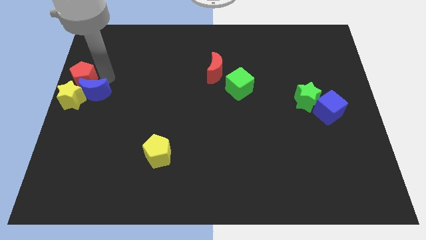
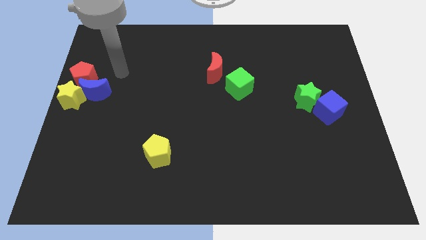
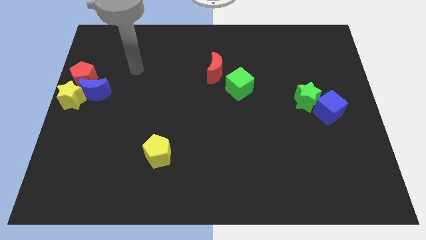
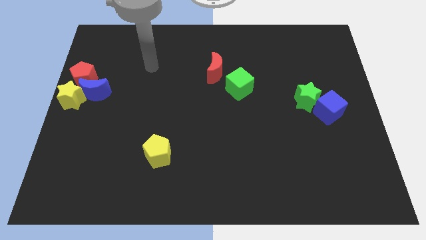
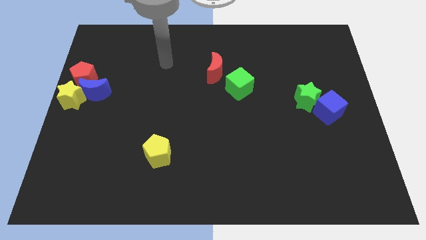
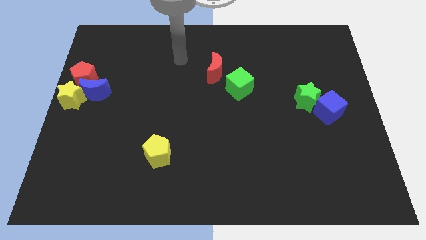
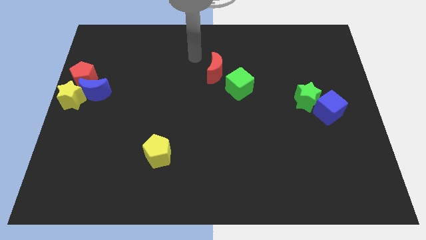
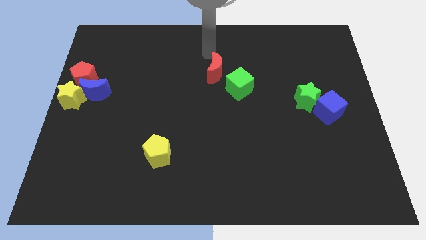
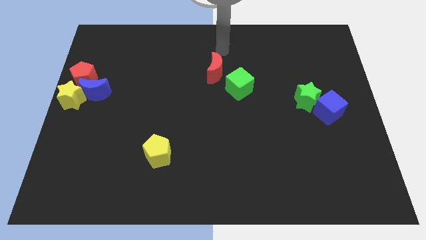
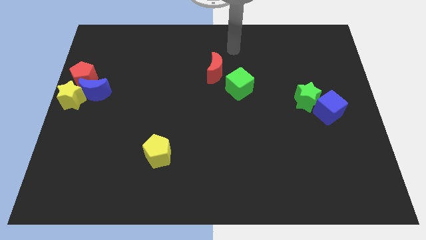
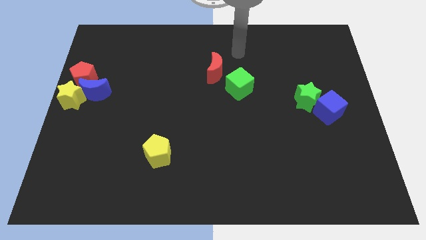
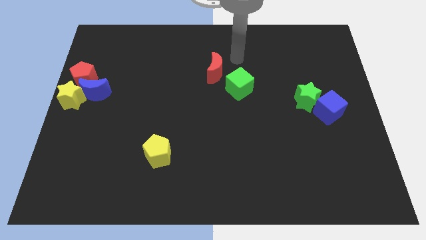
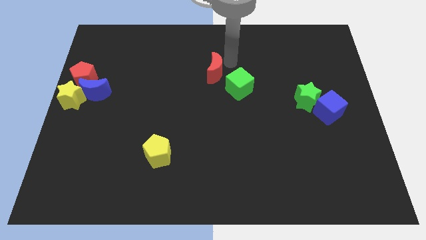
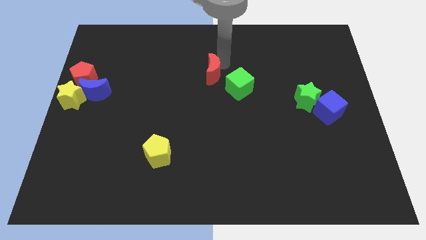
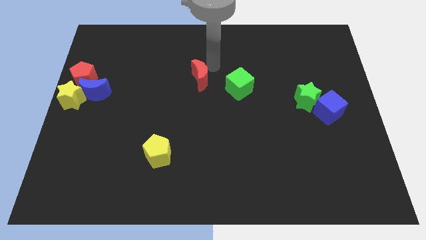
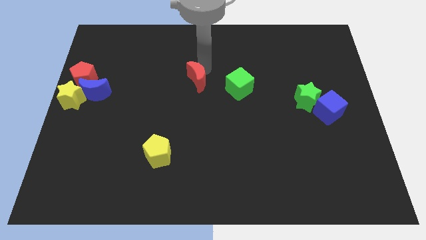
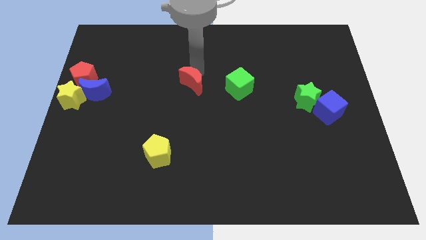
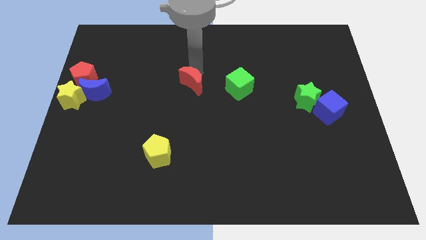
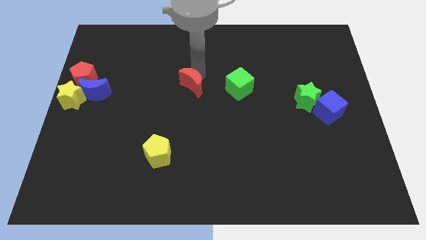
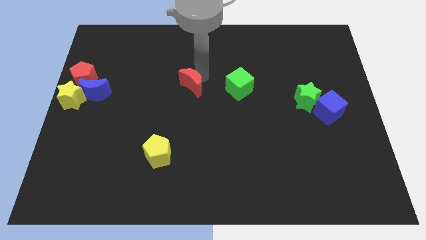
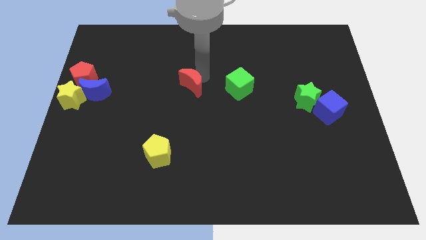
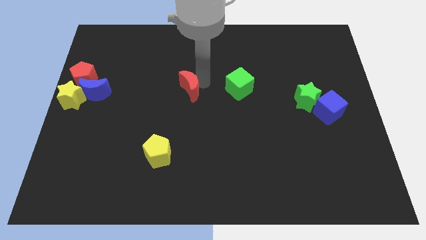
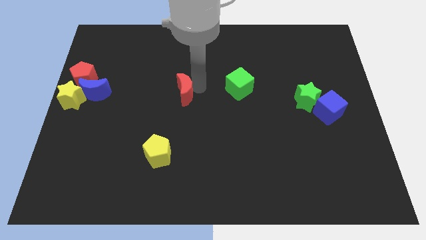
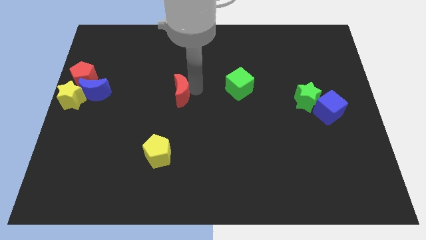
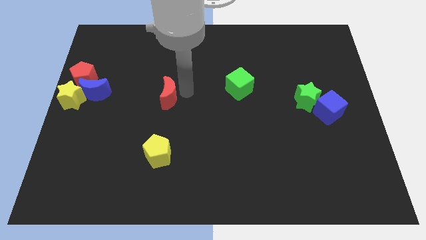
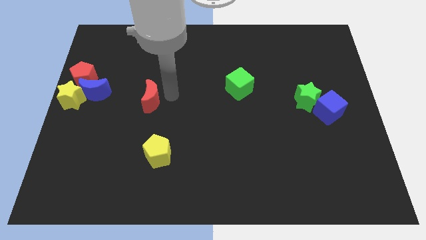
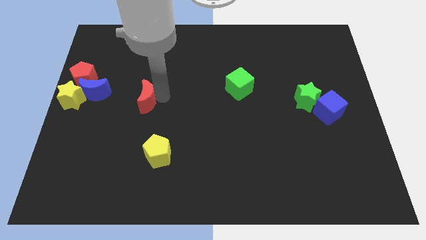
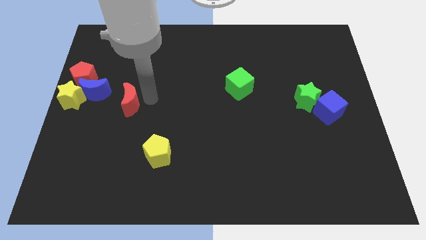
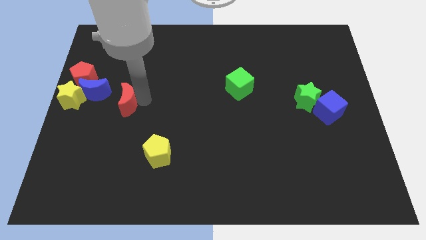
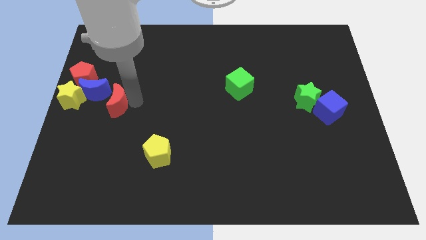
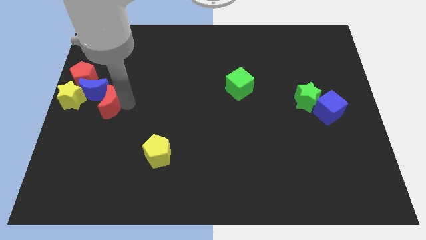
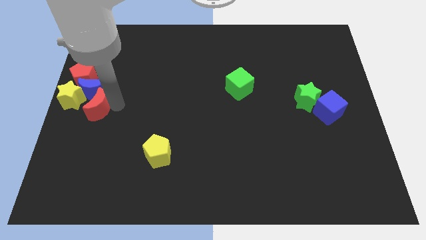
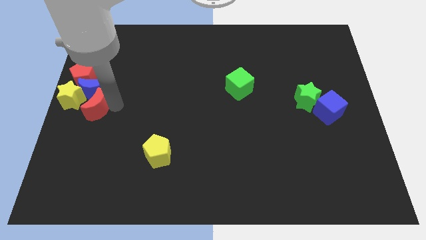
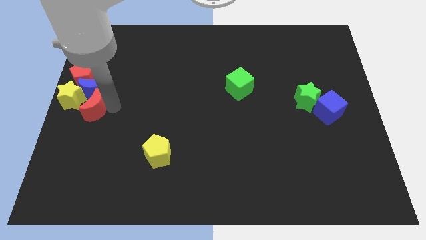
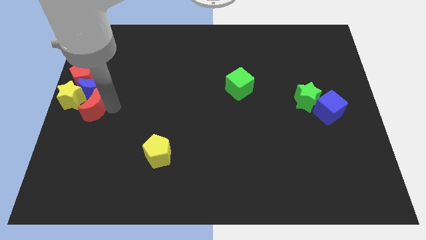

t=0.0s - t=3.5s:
separate the red moon from the green cube

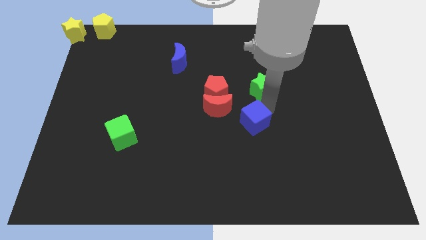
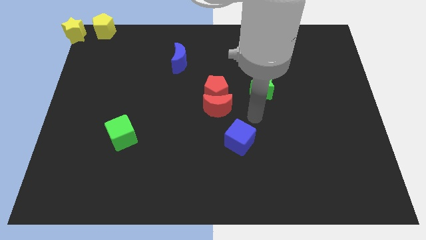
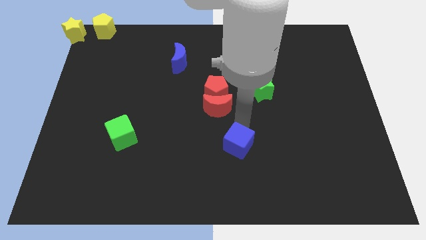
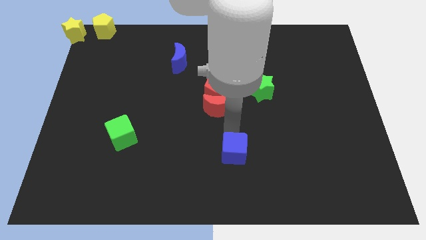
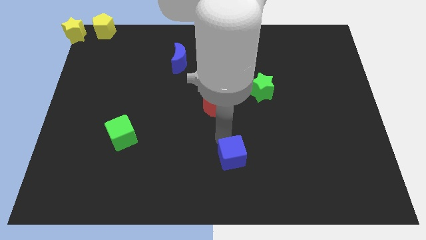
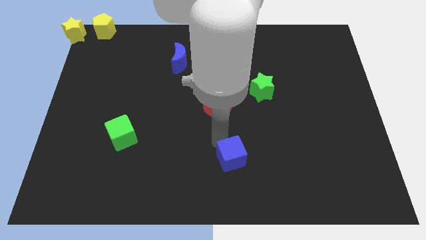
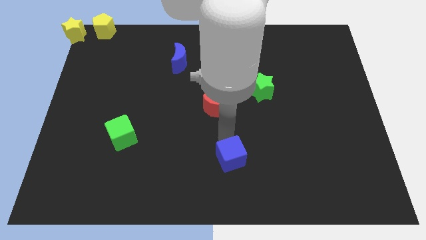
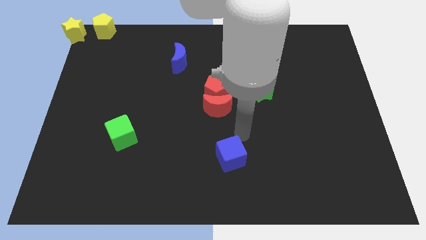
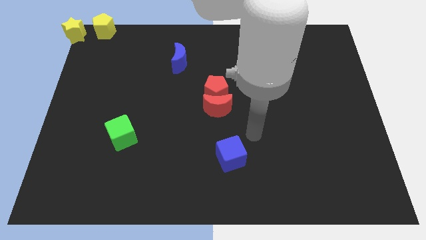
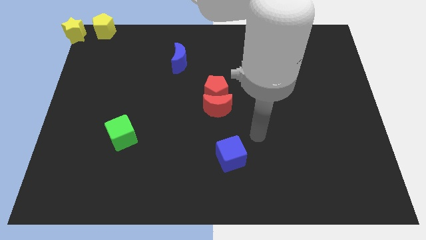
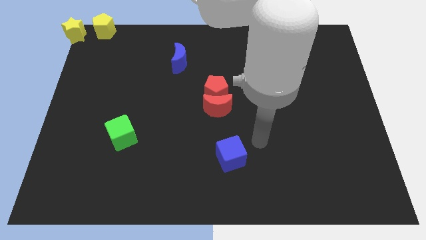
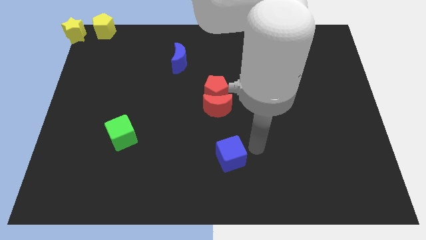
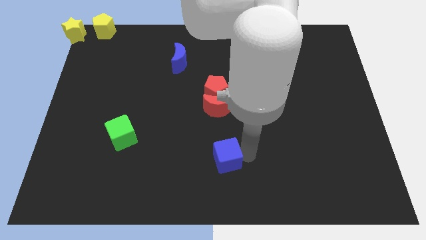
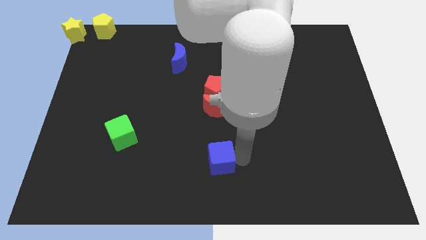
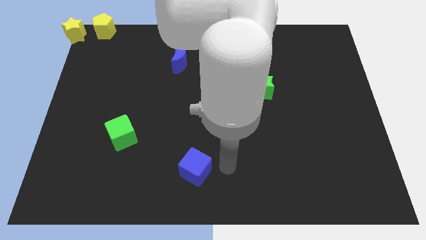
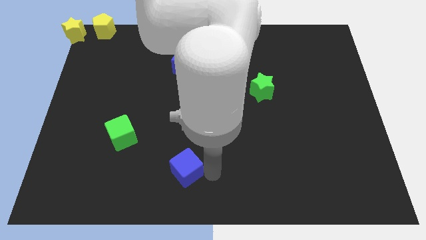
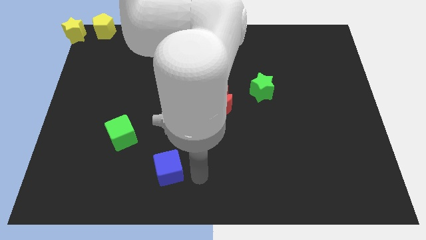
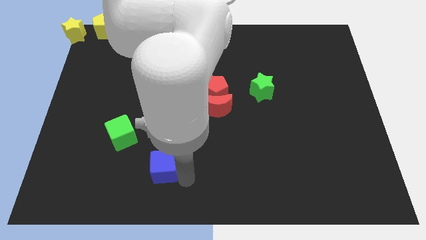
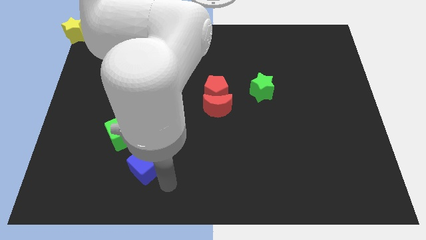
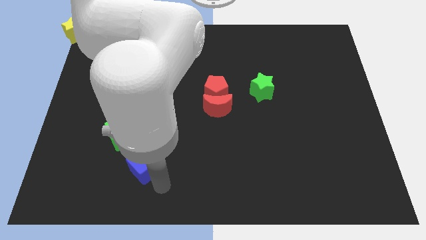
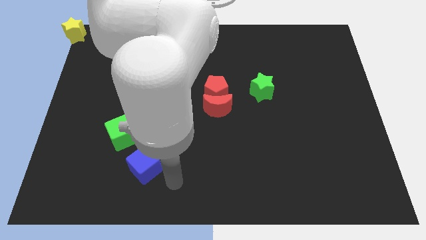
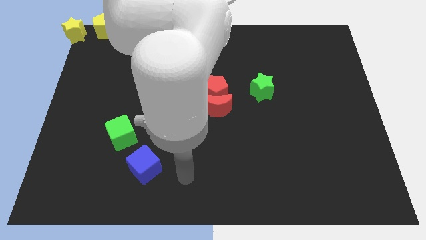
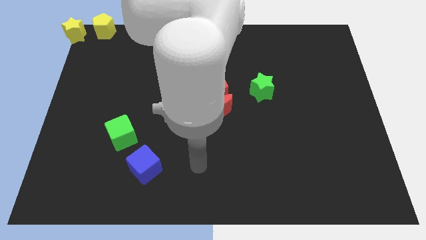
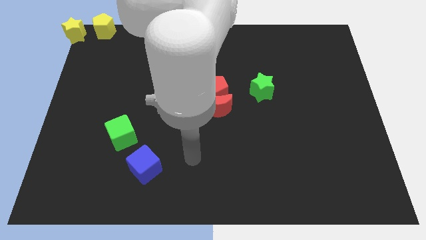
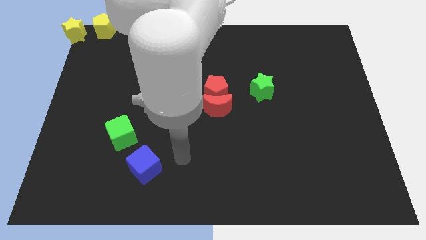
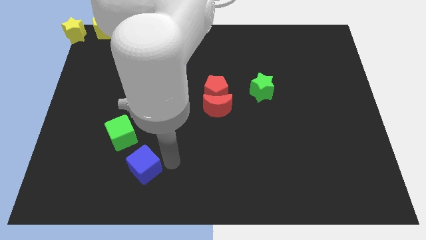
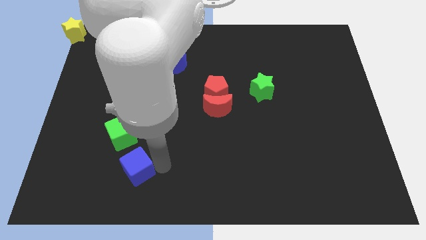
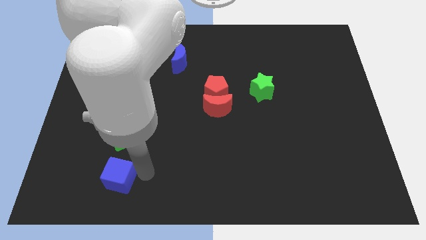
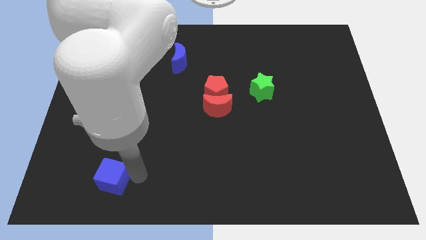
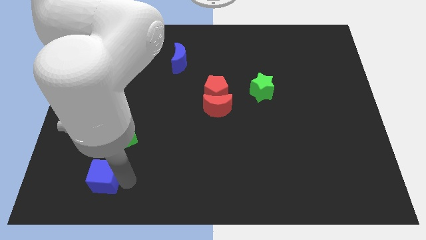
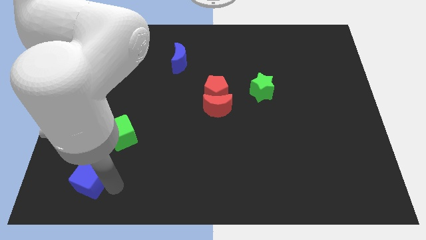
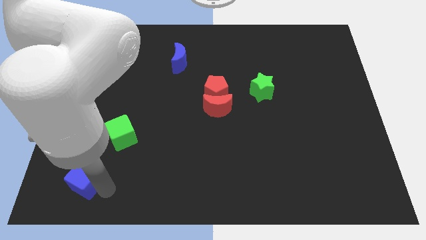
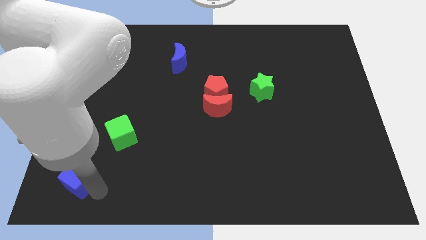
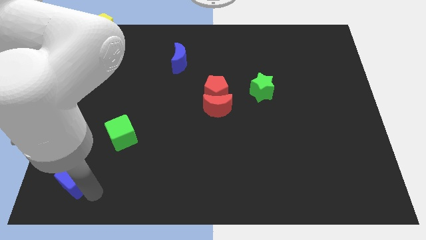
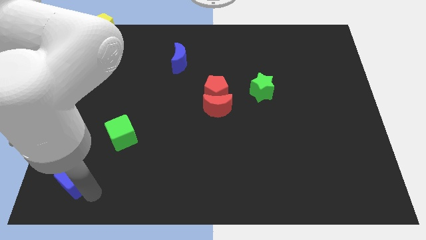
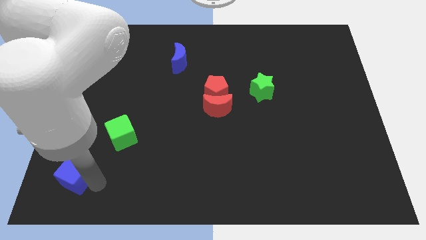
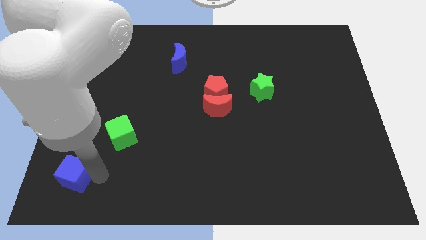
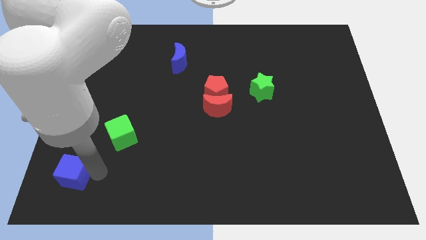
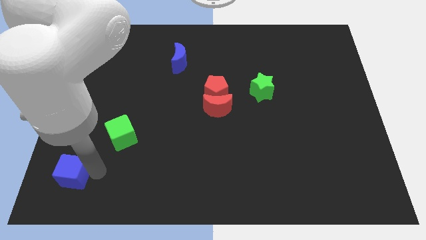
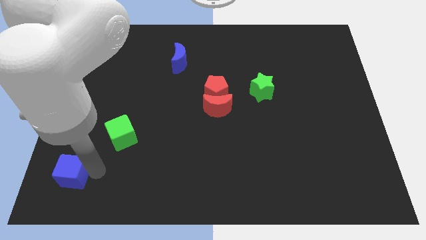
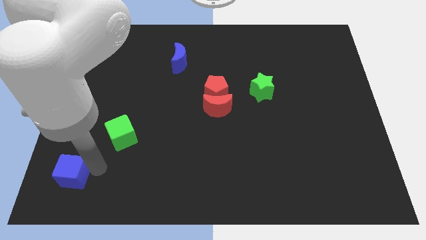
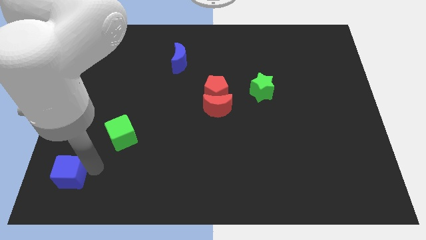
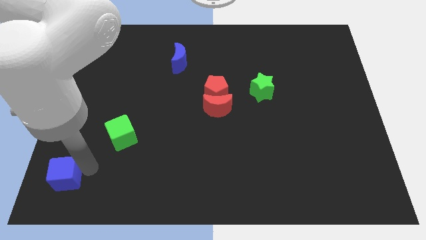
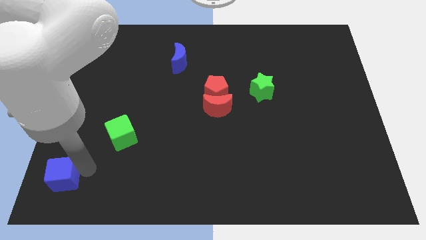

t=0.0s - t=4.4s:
move blue cube left below the green cube

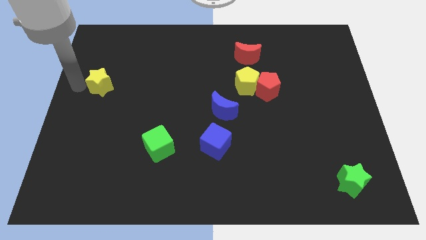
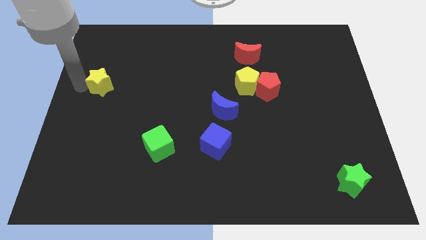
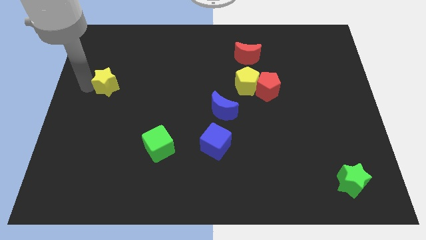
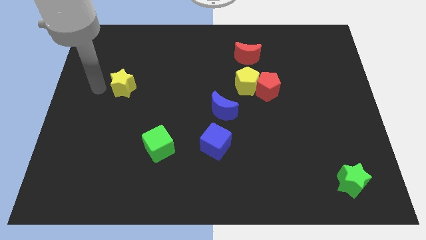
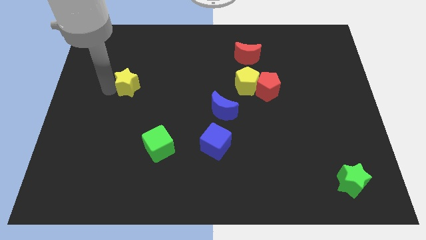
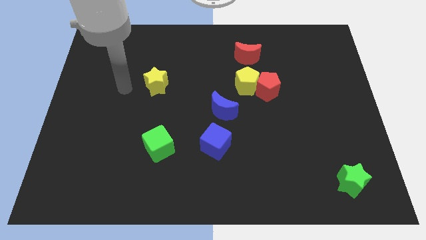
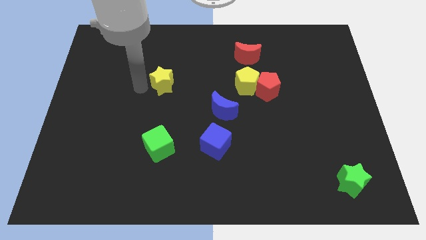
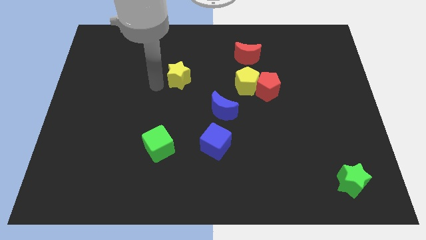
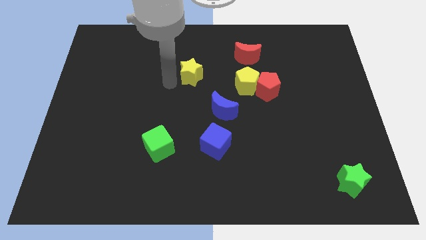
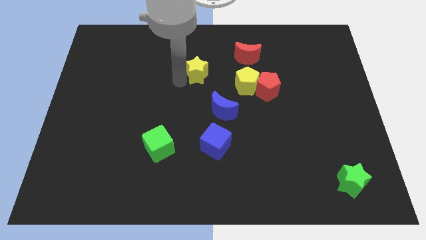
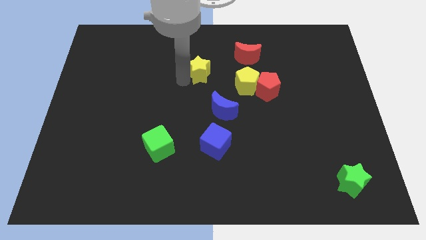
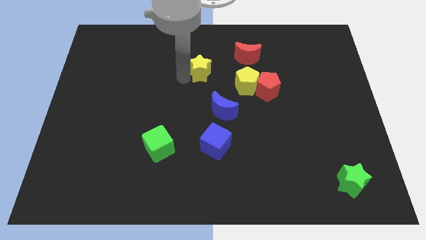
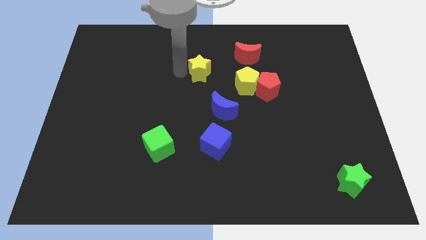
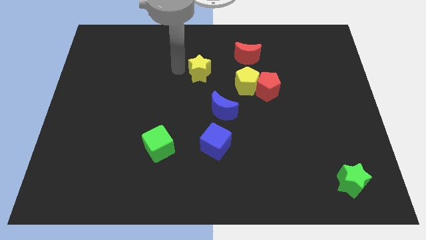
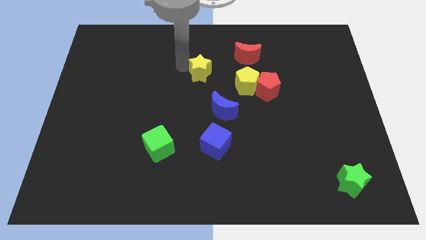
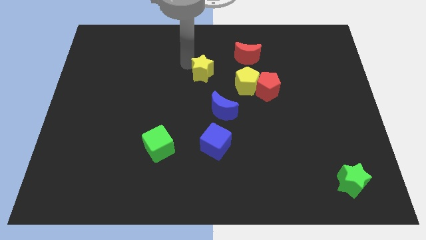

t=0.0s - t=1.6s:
place the yellow star left to the yellow pentagon
